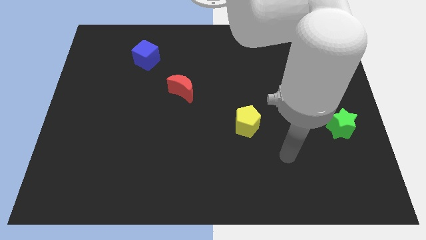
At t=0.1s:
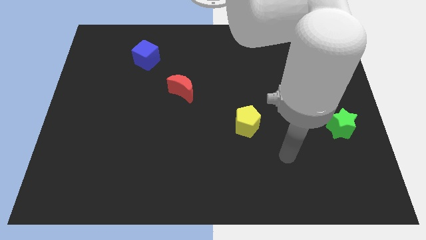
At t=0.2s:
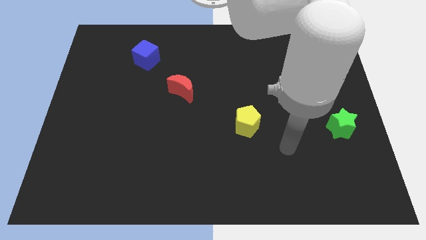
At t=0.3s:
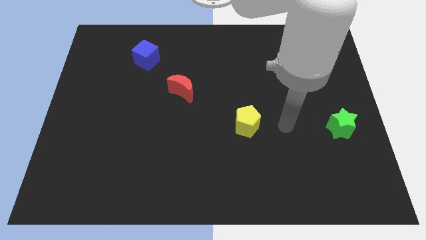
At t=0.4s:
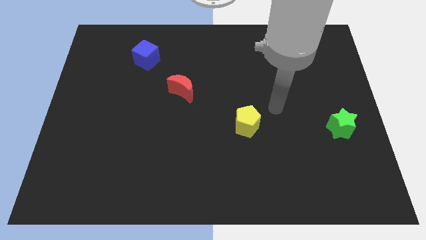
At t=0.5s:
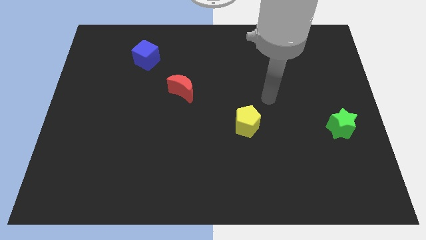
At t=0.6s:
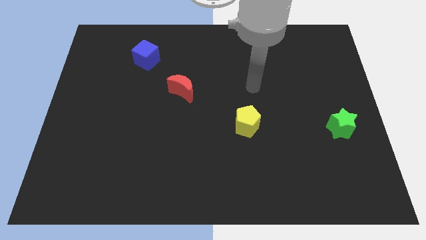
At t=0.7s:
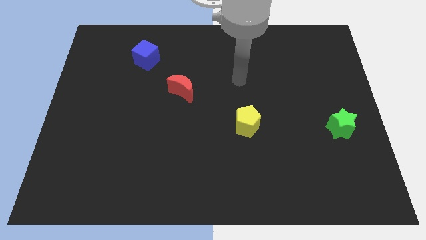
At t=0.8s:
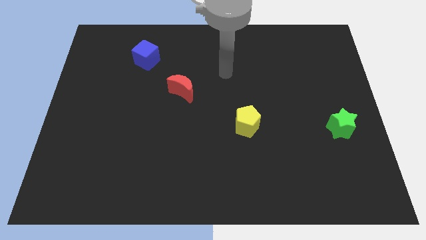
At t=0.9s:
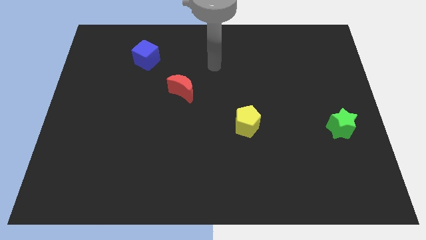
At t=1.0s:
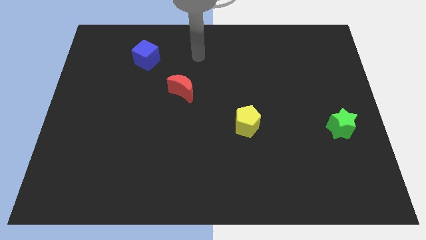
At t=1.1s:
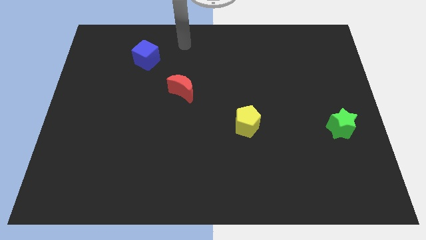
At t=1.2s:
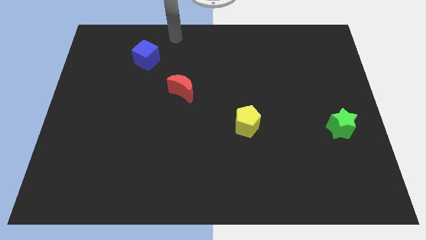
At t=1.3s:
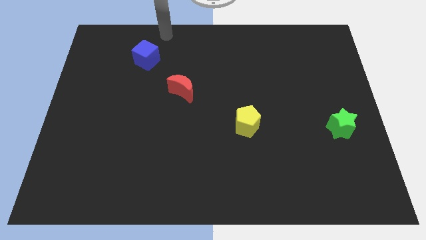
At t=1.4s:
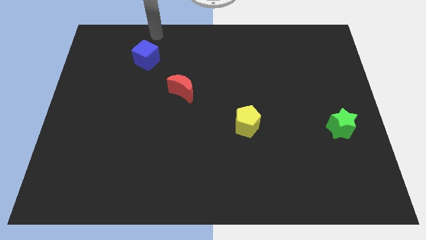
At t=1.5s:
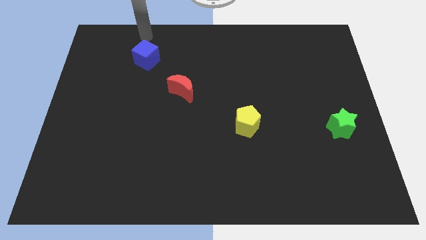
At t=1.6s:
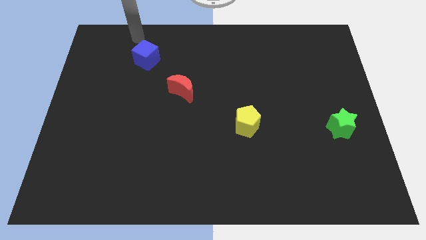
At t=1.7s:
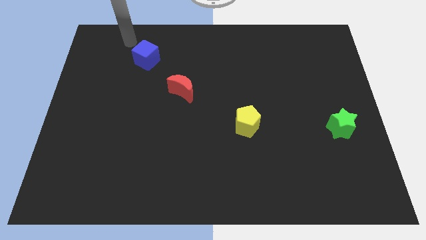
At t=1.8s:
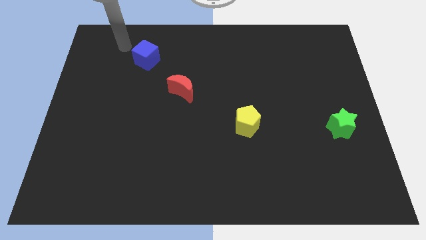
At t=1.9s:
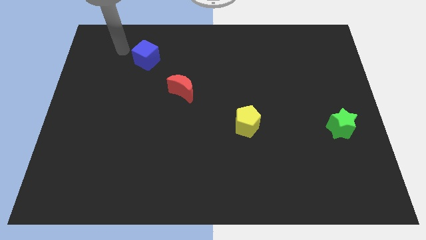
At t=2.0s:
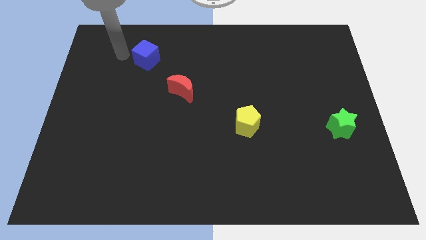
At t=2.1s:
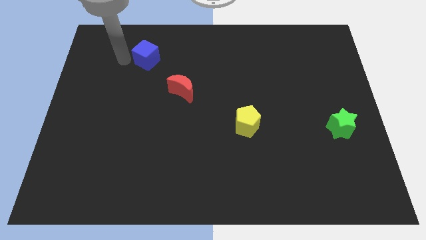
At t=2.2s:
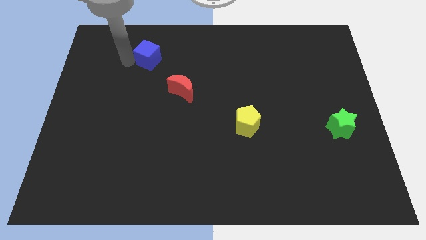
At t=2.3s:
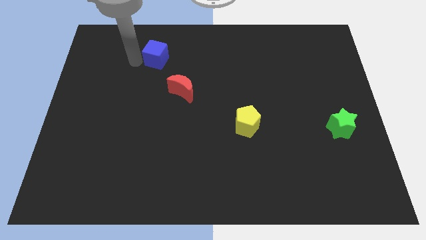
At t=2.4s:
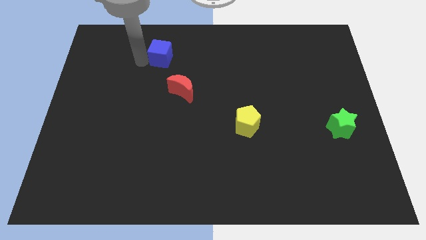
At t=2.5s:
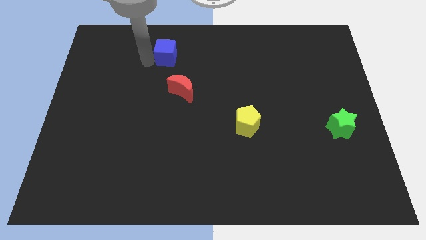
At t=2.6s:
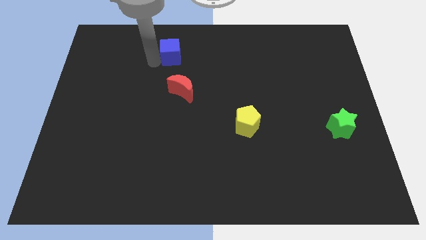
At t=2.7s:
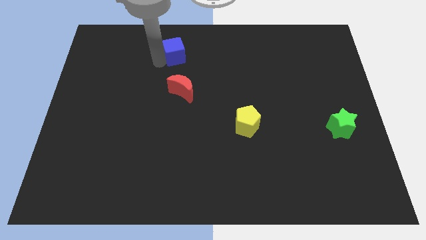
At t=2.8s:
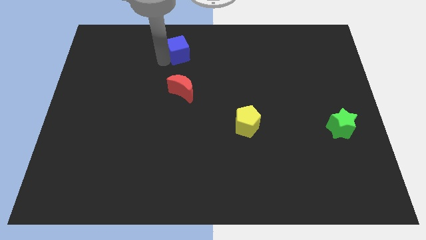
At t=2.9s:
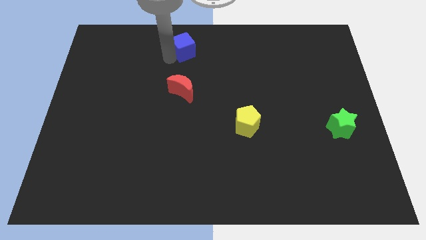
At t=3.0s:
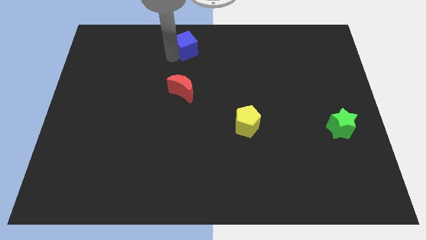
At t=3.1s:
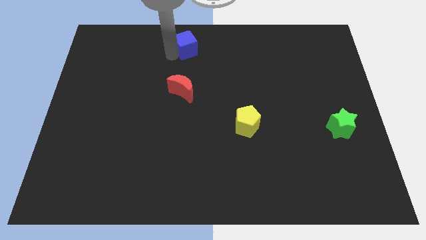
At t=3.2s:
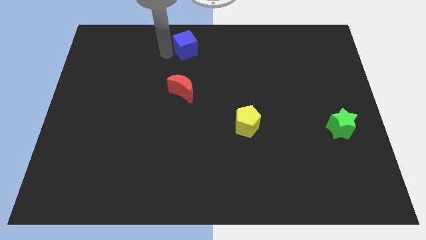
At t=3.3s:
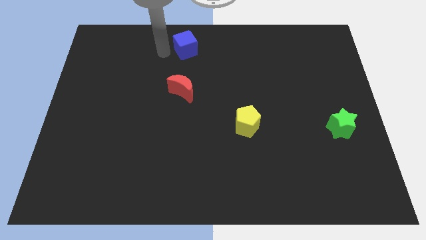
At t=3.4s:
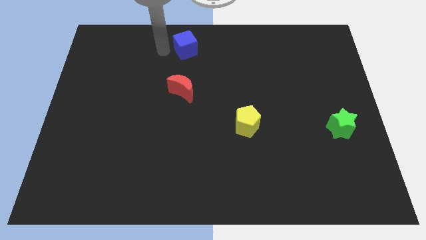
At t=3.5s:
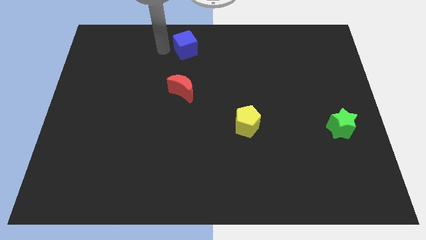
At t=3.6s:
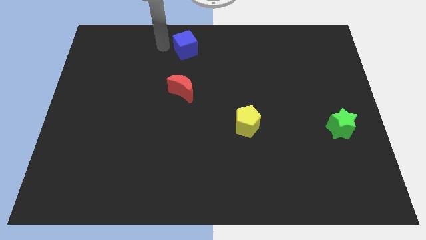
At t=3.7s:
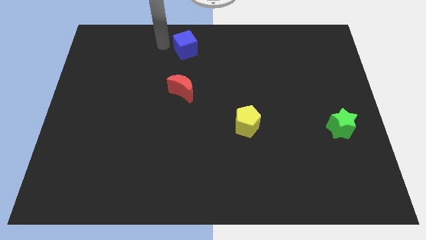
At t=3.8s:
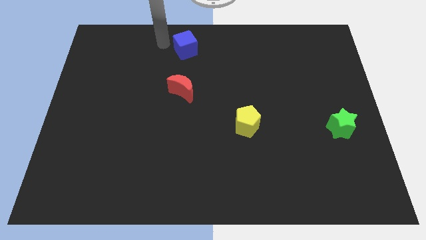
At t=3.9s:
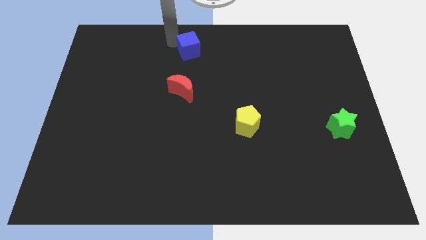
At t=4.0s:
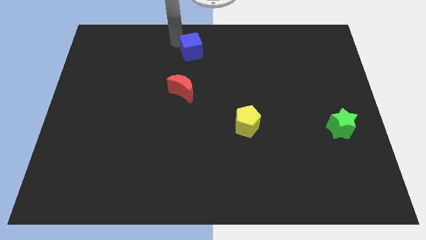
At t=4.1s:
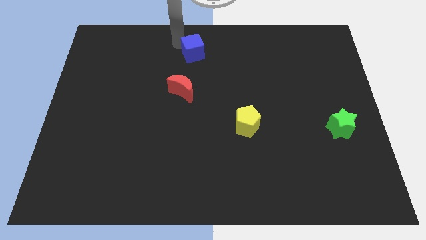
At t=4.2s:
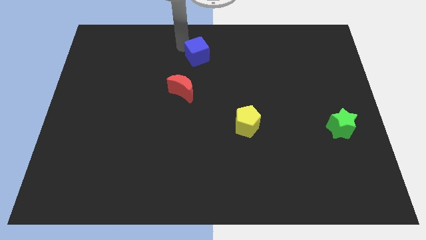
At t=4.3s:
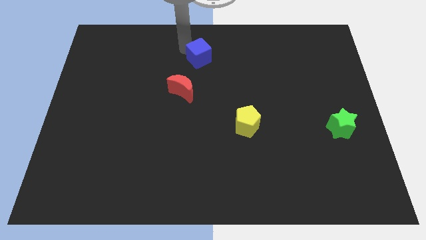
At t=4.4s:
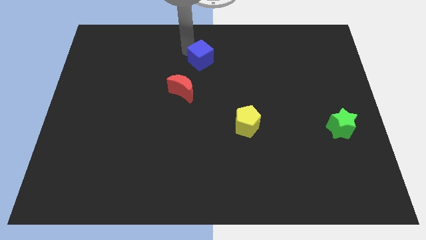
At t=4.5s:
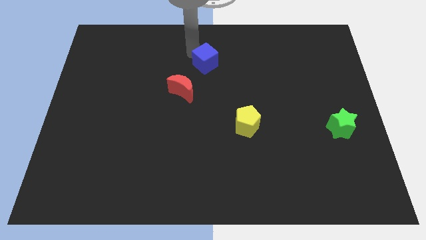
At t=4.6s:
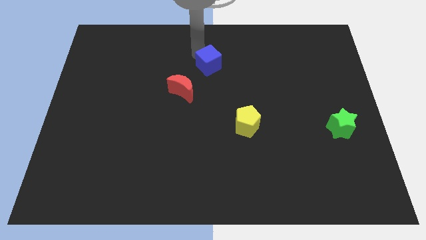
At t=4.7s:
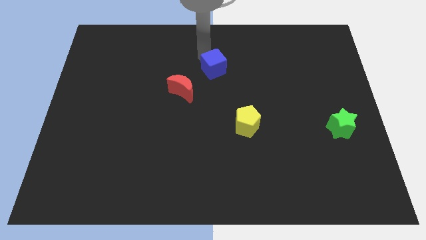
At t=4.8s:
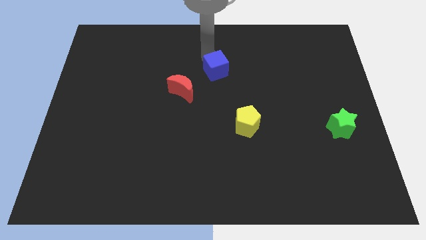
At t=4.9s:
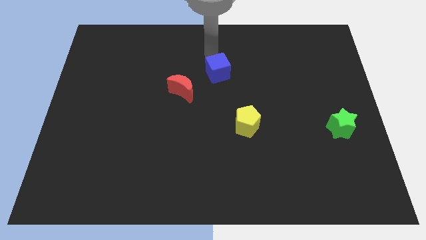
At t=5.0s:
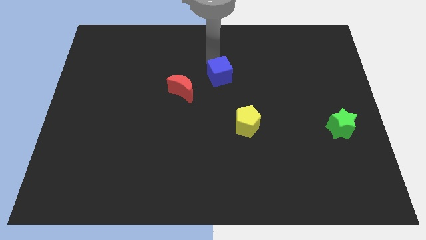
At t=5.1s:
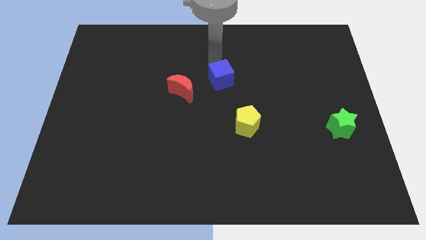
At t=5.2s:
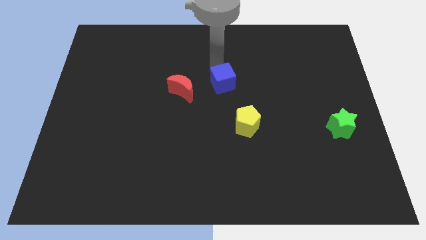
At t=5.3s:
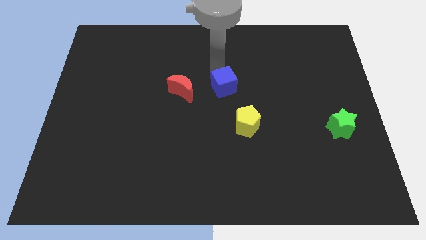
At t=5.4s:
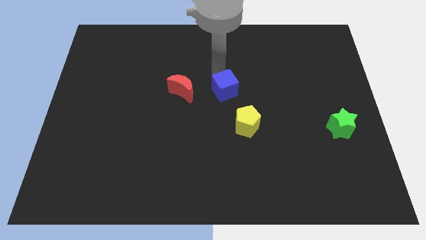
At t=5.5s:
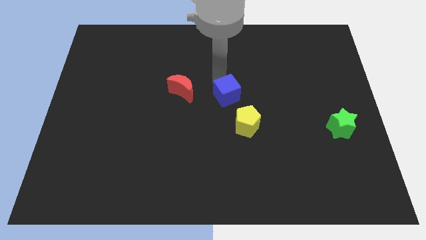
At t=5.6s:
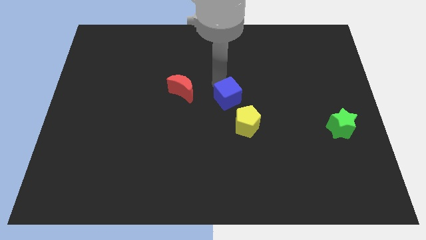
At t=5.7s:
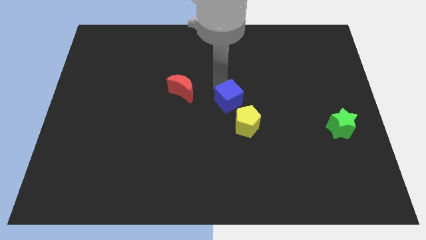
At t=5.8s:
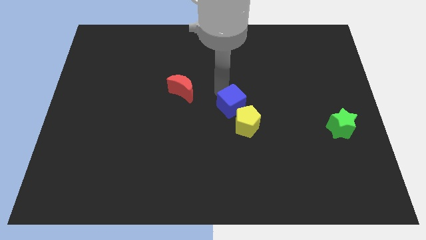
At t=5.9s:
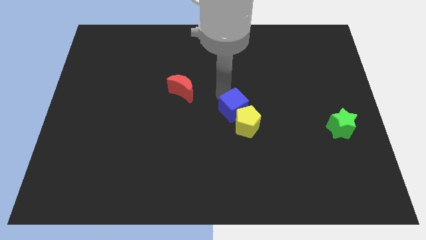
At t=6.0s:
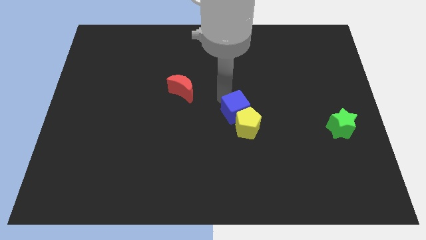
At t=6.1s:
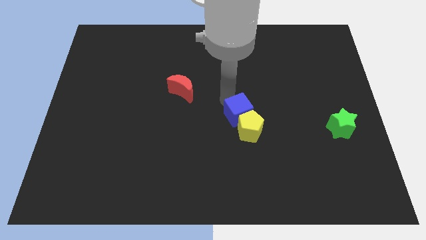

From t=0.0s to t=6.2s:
move the blue cube towards the yellow block

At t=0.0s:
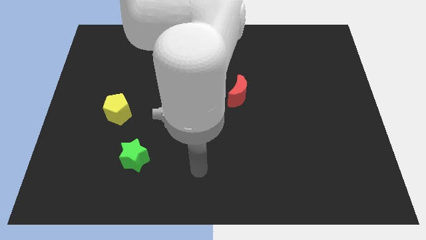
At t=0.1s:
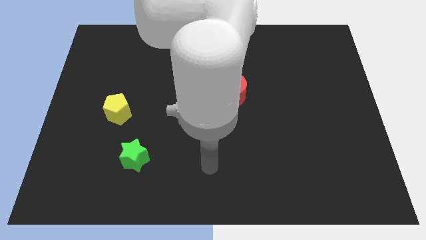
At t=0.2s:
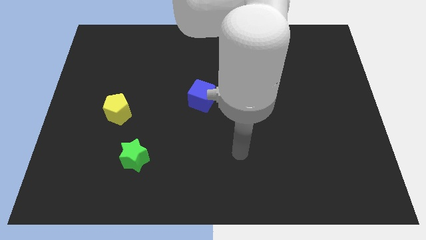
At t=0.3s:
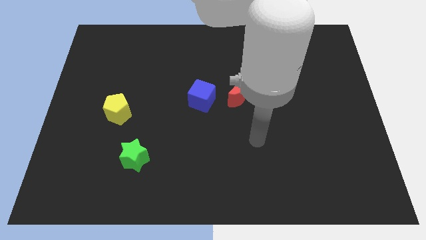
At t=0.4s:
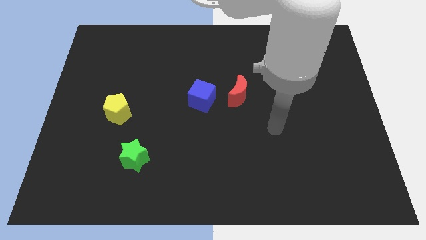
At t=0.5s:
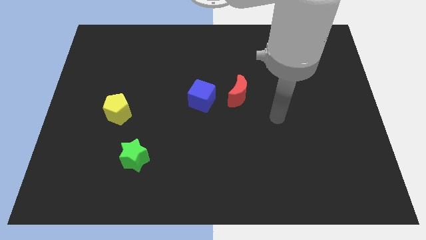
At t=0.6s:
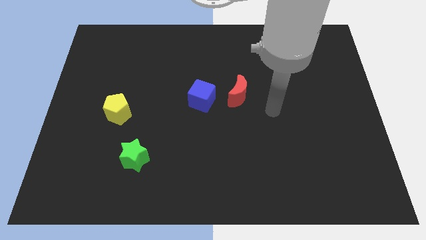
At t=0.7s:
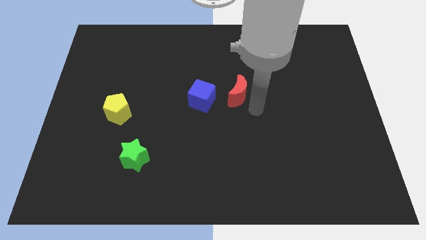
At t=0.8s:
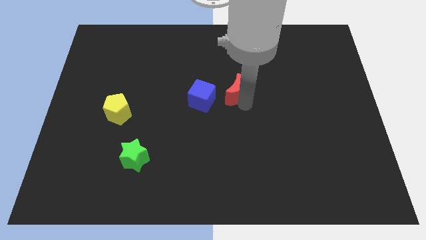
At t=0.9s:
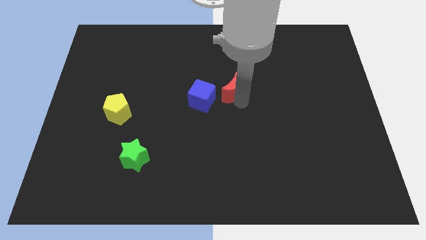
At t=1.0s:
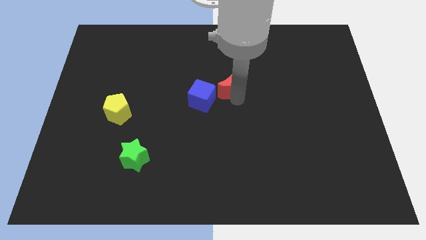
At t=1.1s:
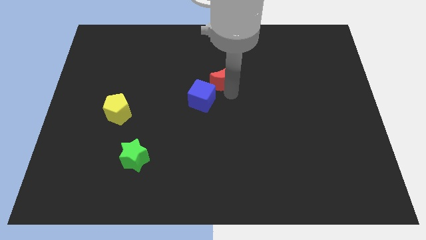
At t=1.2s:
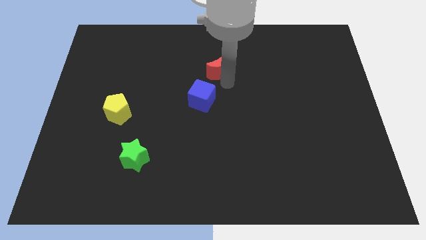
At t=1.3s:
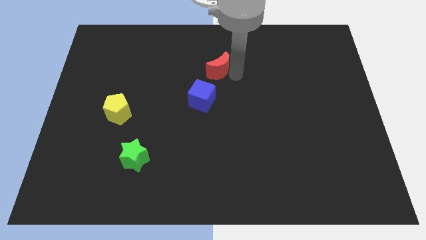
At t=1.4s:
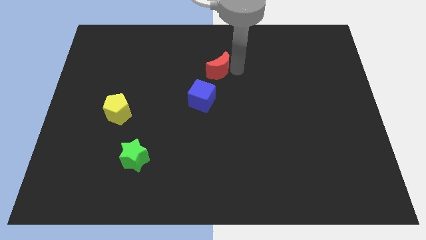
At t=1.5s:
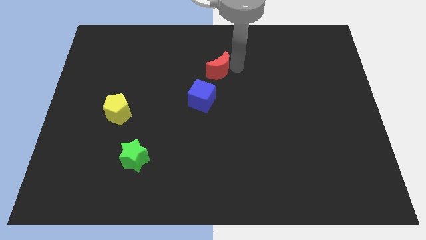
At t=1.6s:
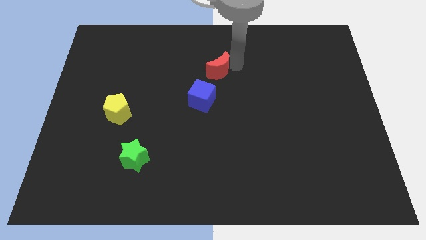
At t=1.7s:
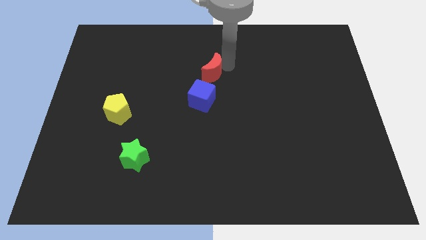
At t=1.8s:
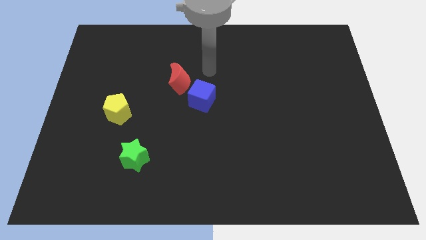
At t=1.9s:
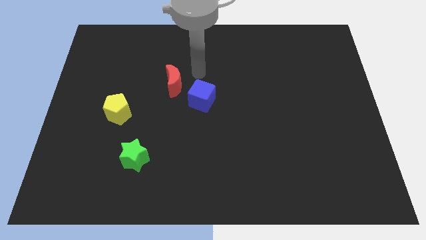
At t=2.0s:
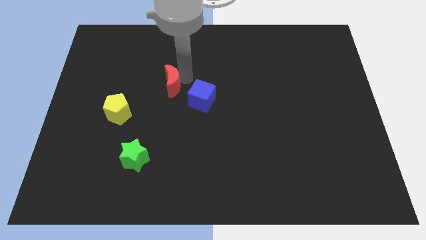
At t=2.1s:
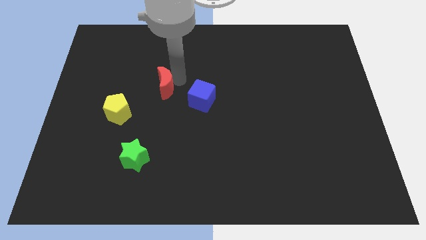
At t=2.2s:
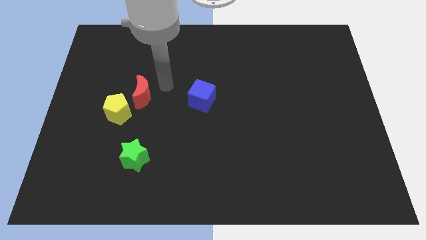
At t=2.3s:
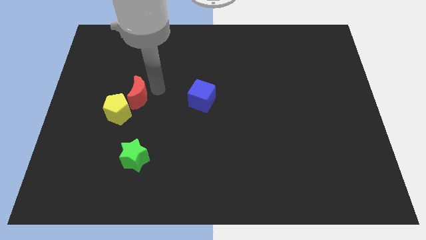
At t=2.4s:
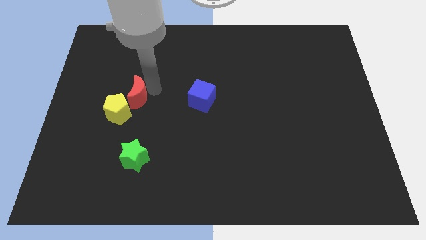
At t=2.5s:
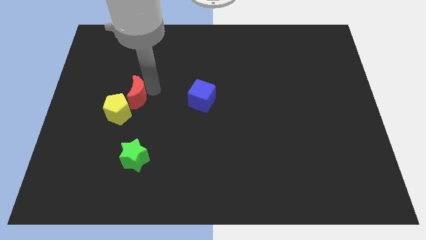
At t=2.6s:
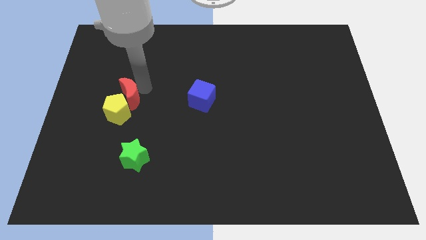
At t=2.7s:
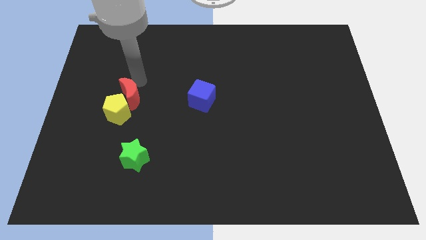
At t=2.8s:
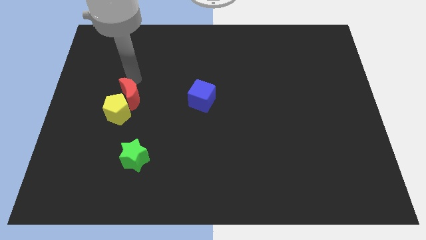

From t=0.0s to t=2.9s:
slide the red moon next to the pentagon
